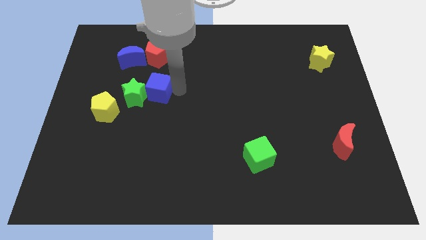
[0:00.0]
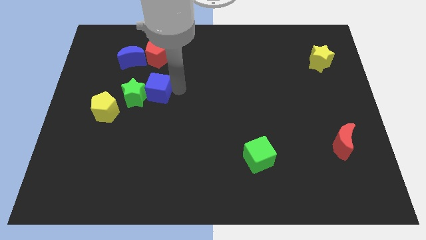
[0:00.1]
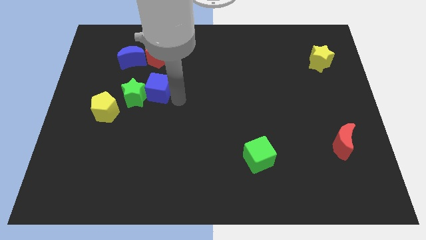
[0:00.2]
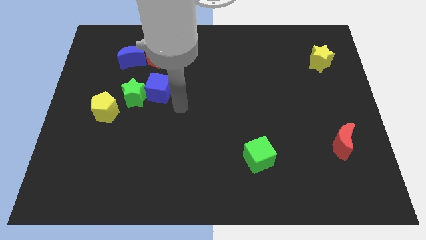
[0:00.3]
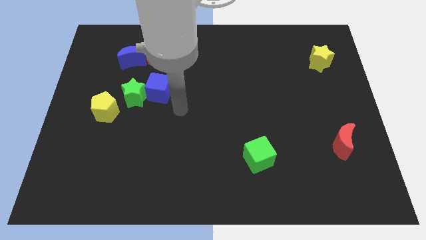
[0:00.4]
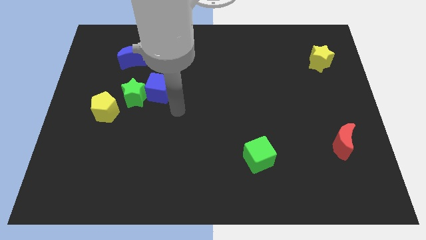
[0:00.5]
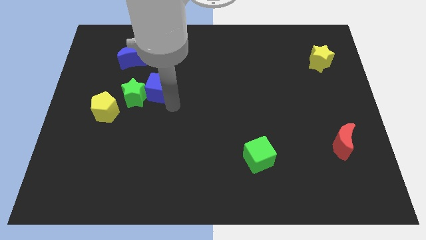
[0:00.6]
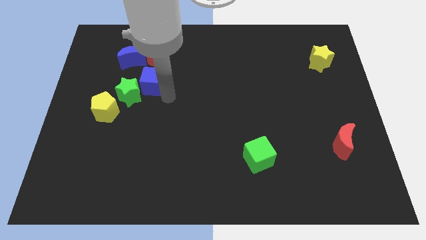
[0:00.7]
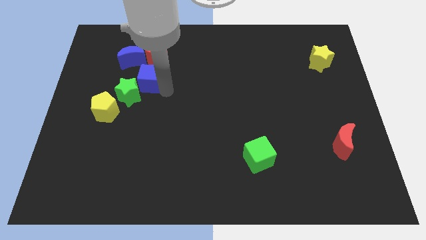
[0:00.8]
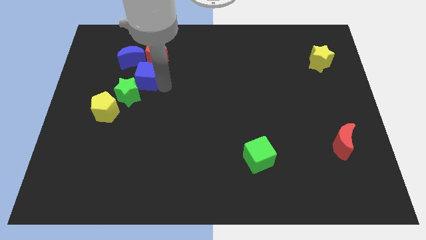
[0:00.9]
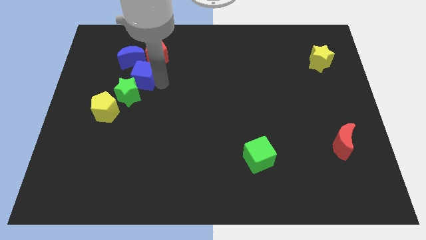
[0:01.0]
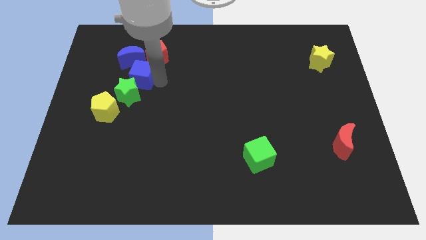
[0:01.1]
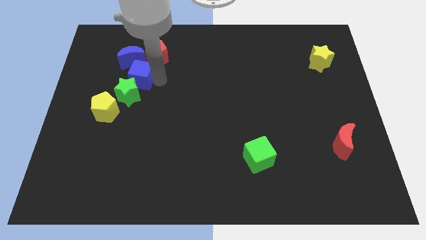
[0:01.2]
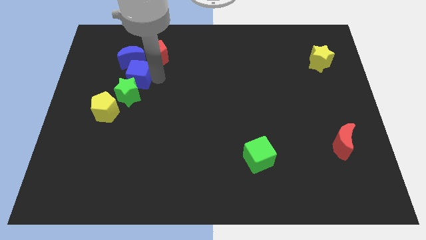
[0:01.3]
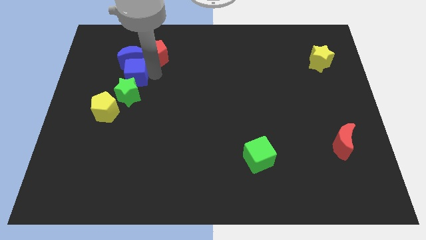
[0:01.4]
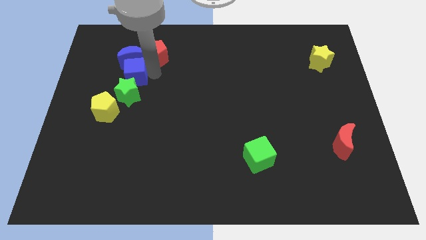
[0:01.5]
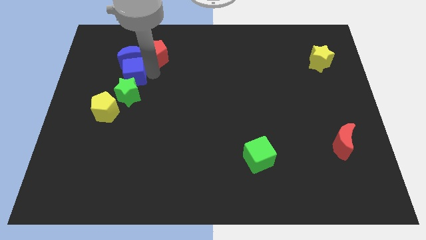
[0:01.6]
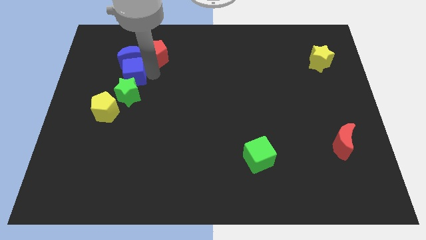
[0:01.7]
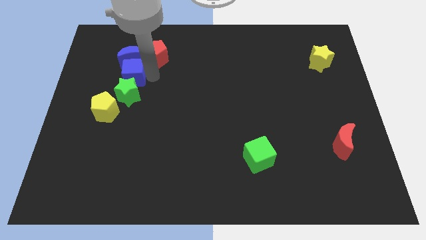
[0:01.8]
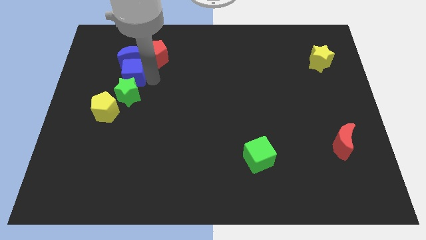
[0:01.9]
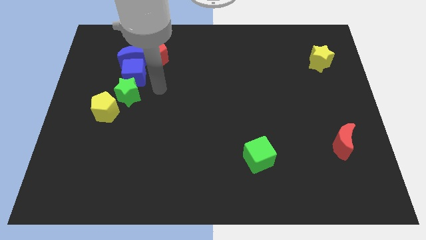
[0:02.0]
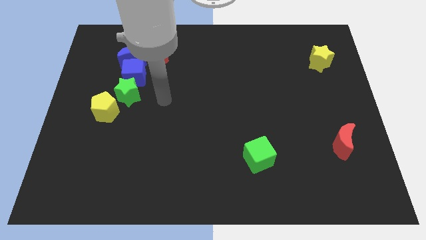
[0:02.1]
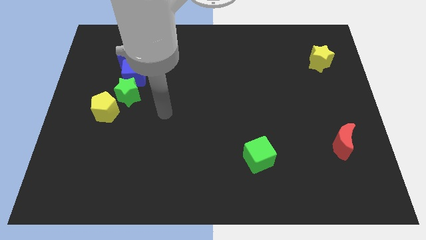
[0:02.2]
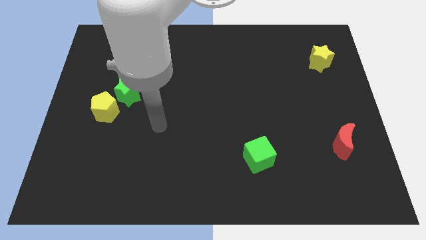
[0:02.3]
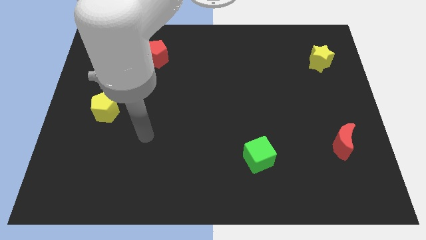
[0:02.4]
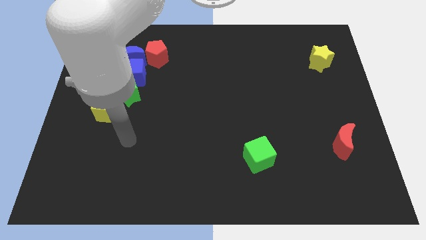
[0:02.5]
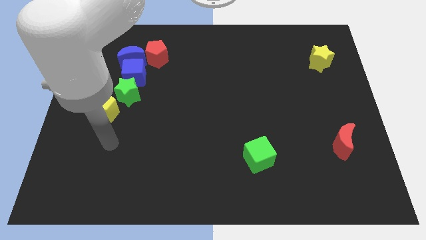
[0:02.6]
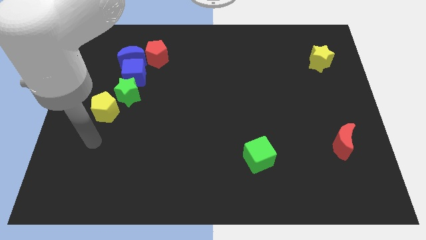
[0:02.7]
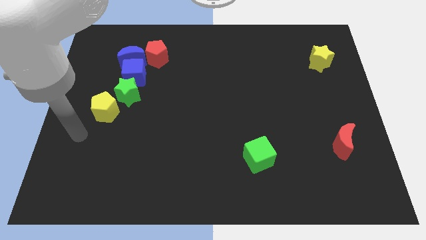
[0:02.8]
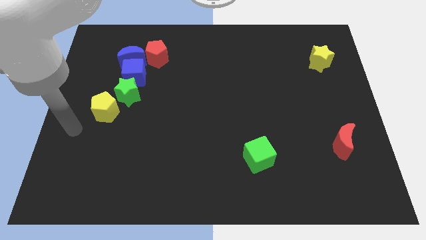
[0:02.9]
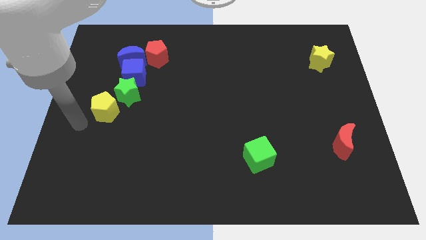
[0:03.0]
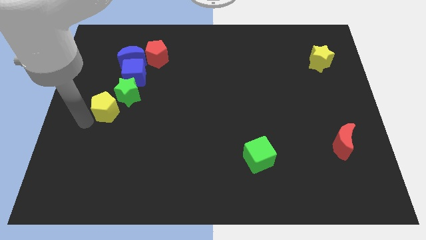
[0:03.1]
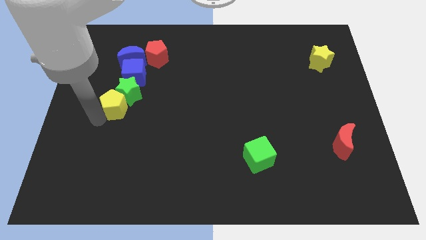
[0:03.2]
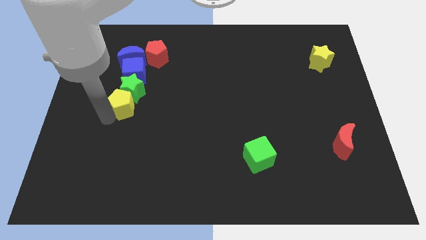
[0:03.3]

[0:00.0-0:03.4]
move the blue cube close to the blue crescent

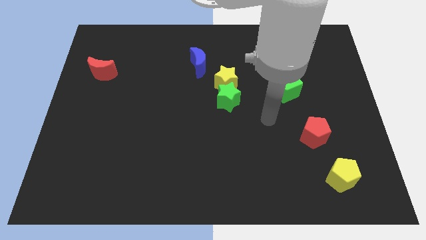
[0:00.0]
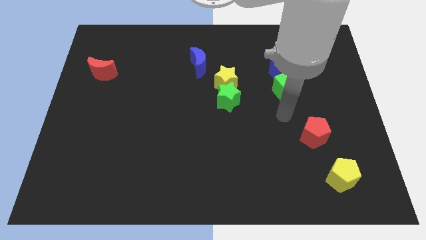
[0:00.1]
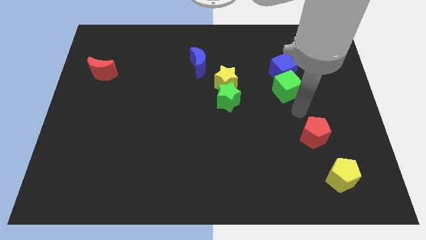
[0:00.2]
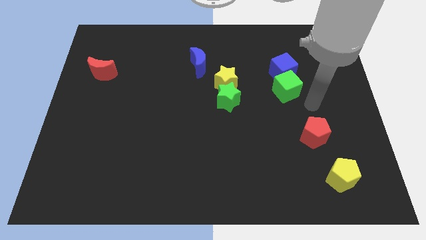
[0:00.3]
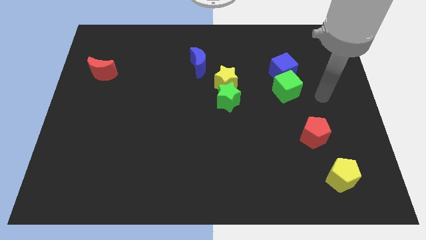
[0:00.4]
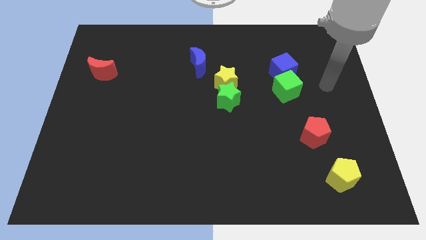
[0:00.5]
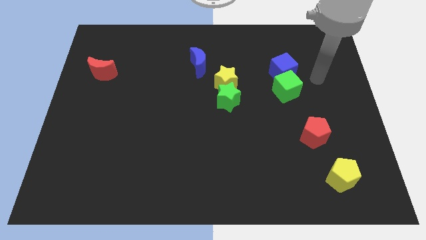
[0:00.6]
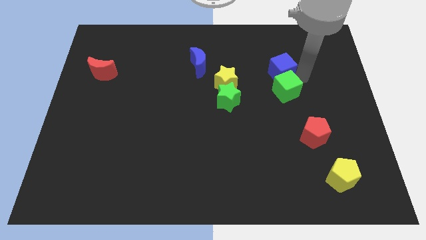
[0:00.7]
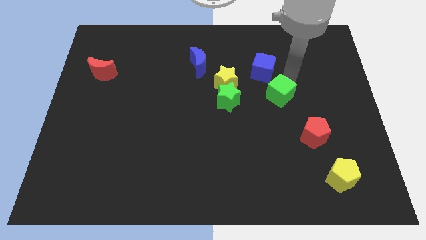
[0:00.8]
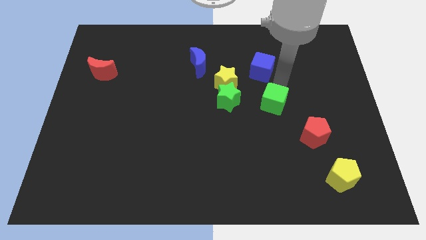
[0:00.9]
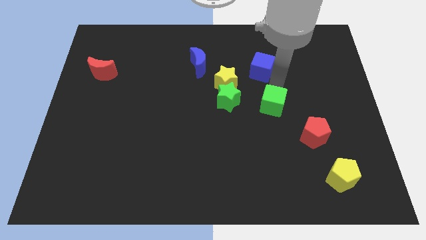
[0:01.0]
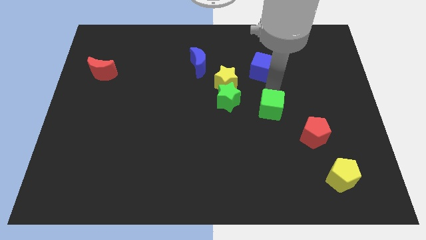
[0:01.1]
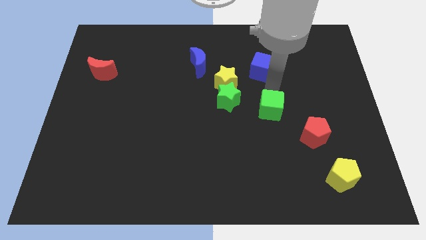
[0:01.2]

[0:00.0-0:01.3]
separate the green cube from the blue cube

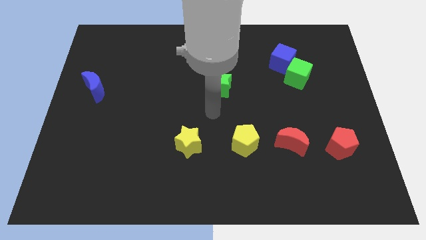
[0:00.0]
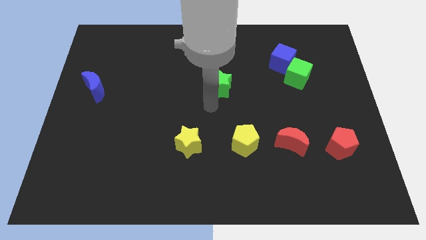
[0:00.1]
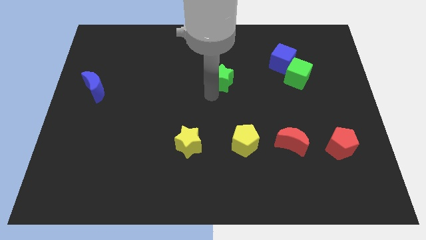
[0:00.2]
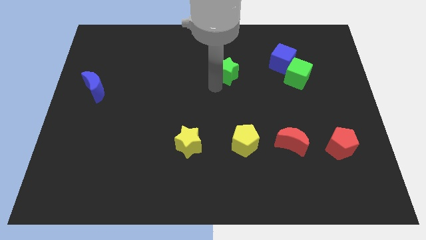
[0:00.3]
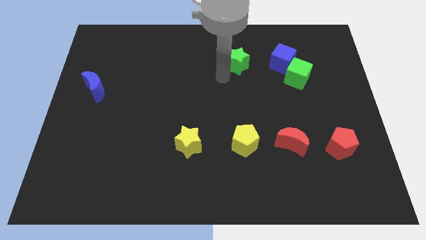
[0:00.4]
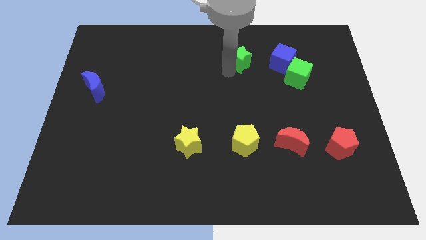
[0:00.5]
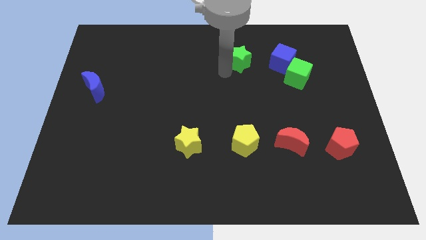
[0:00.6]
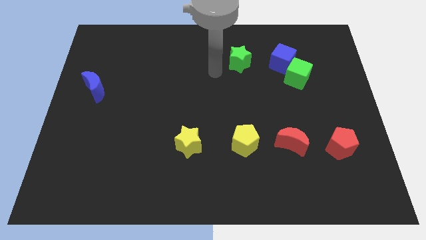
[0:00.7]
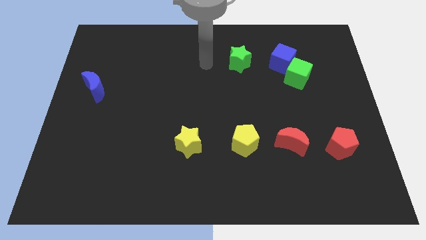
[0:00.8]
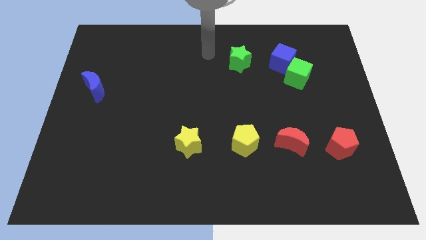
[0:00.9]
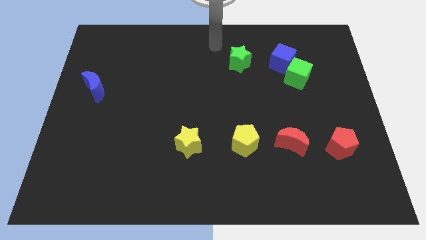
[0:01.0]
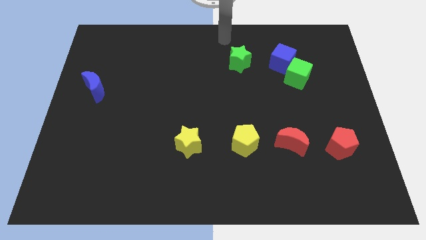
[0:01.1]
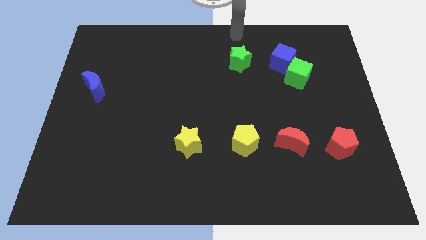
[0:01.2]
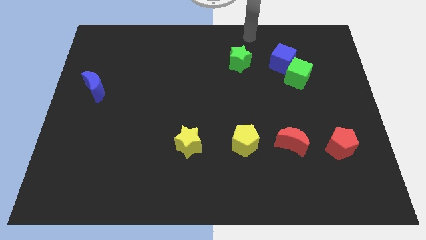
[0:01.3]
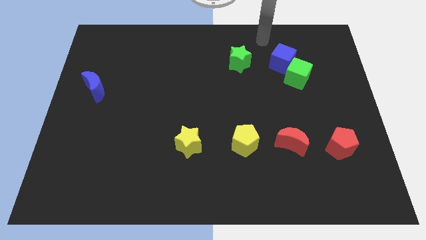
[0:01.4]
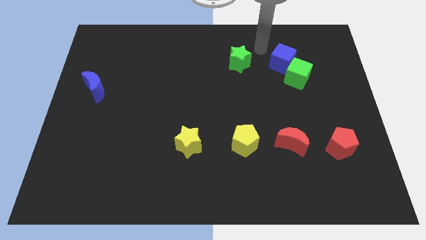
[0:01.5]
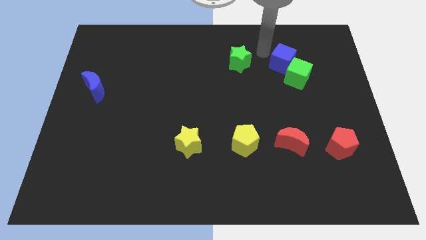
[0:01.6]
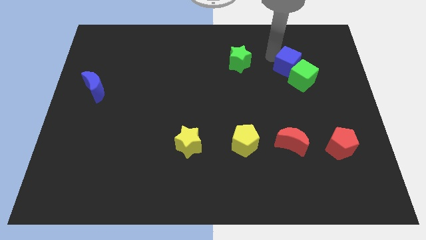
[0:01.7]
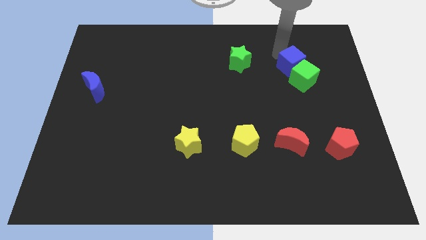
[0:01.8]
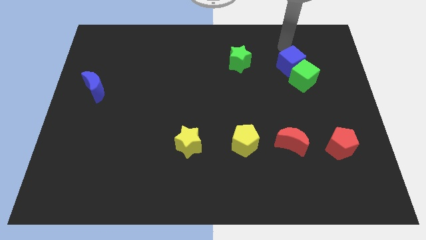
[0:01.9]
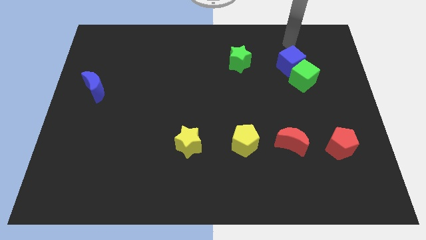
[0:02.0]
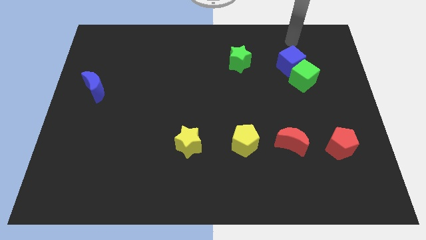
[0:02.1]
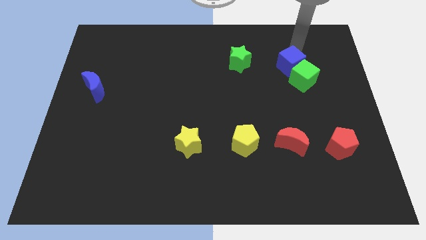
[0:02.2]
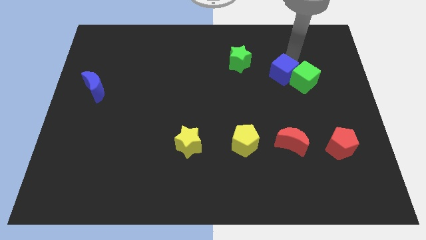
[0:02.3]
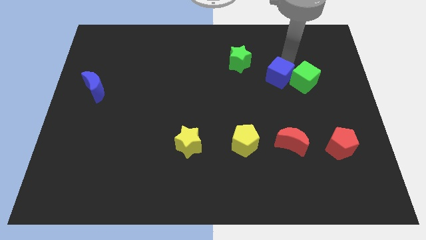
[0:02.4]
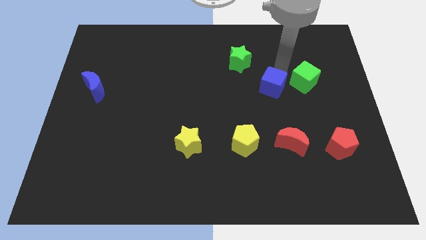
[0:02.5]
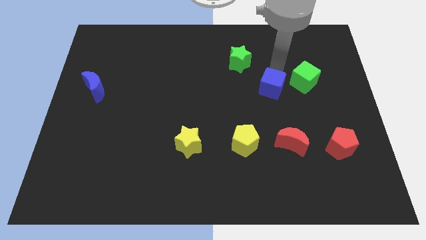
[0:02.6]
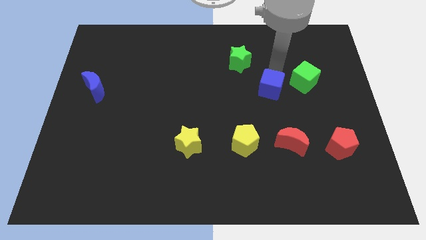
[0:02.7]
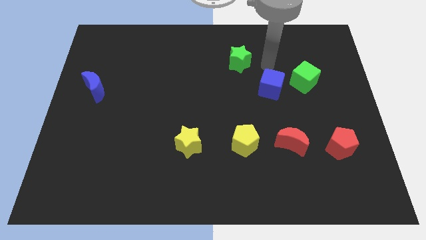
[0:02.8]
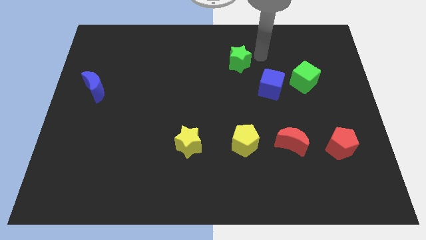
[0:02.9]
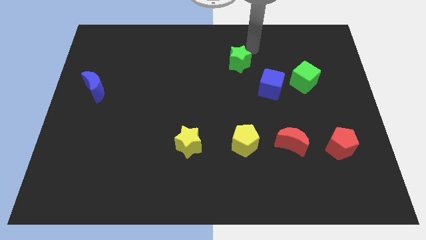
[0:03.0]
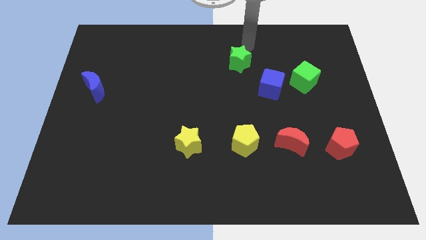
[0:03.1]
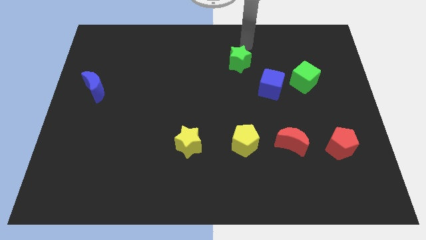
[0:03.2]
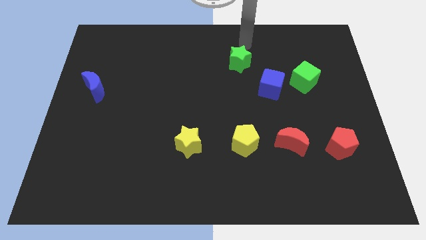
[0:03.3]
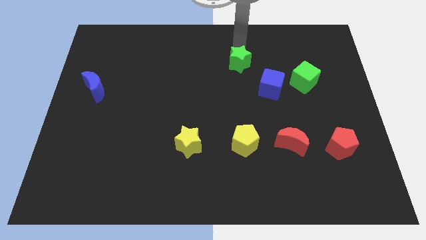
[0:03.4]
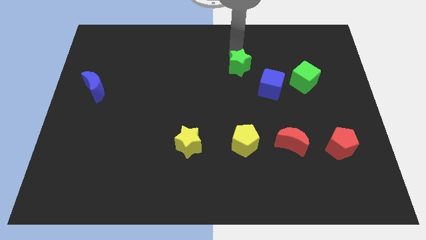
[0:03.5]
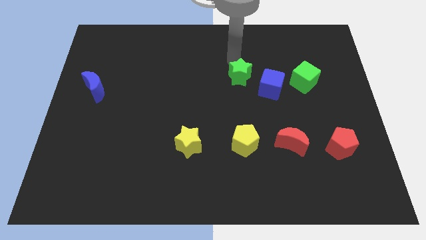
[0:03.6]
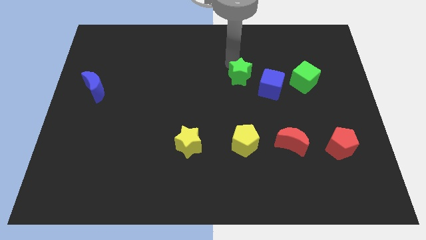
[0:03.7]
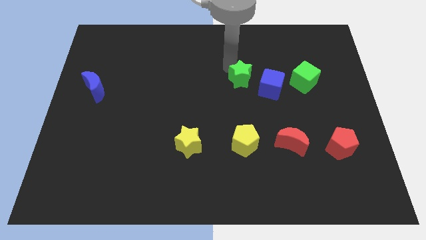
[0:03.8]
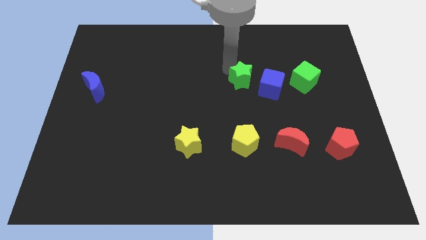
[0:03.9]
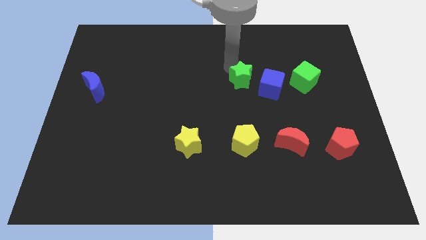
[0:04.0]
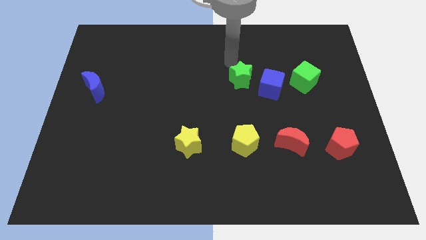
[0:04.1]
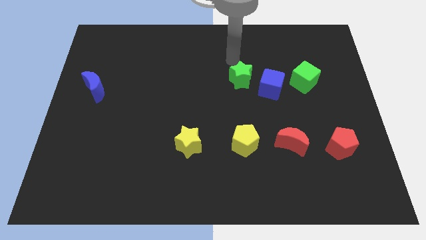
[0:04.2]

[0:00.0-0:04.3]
put the green star adjacent to the blue cube

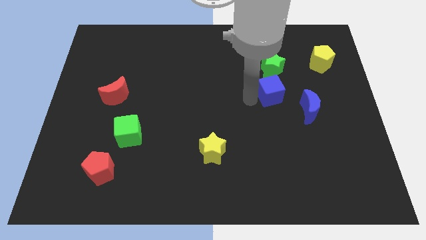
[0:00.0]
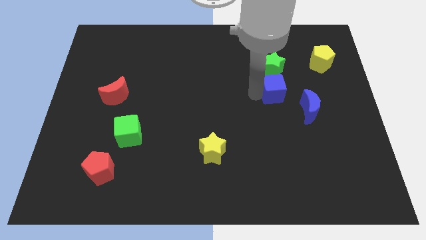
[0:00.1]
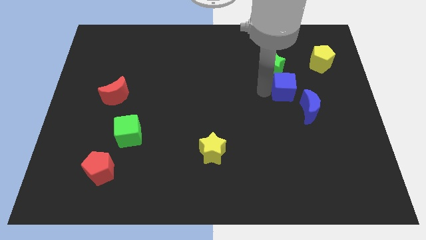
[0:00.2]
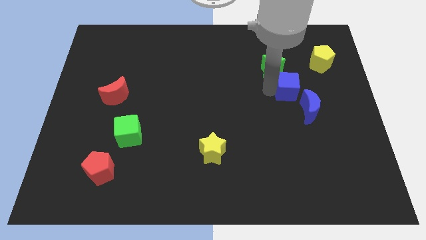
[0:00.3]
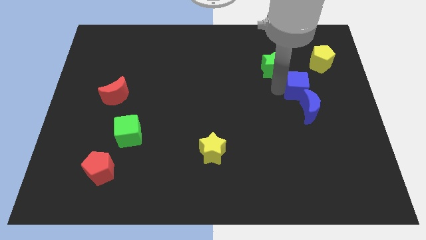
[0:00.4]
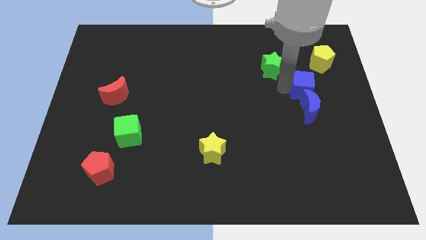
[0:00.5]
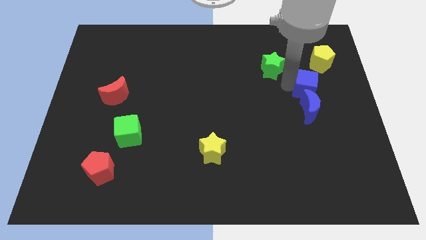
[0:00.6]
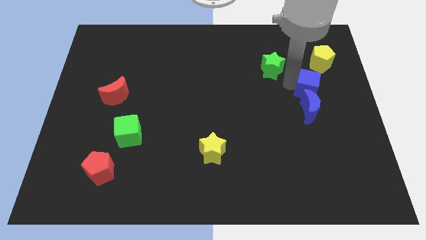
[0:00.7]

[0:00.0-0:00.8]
place blue cube on the top of blue moon
